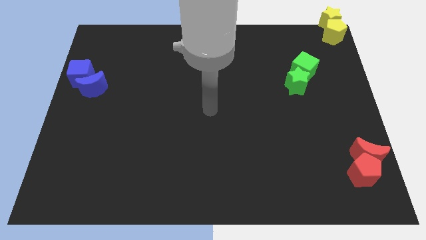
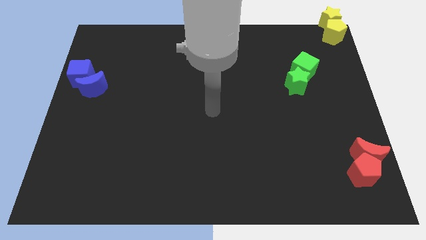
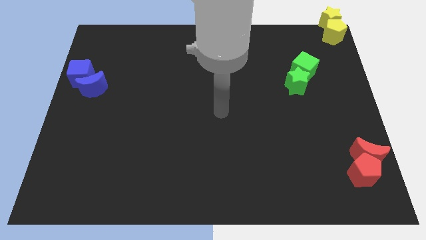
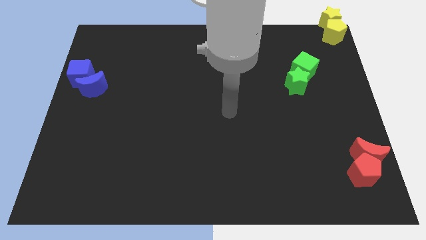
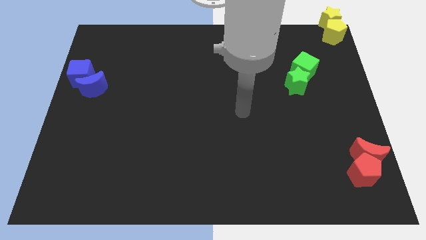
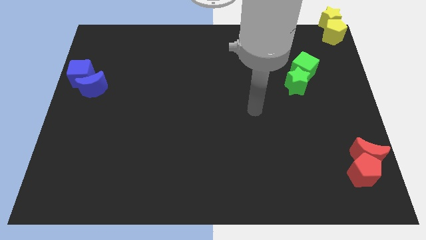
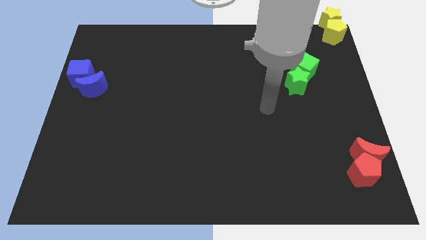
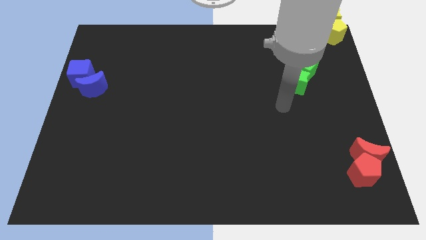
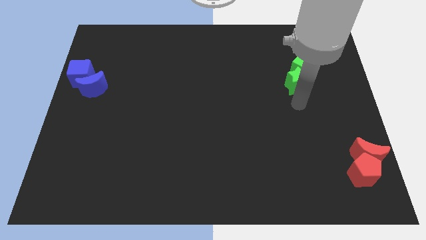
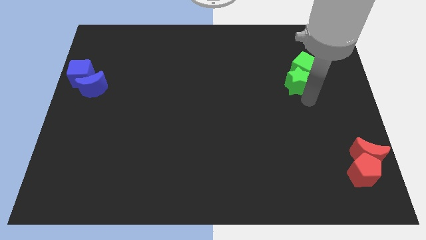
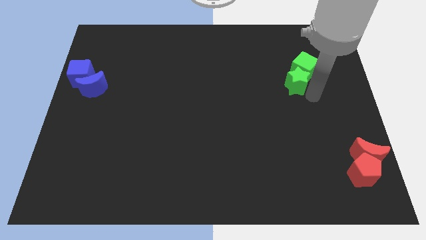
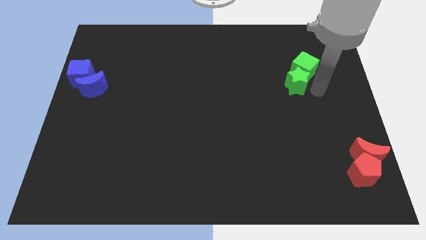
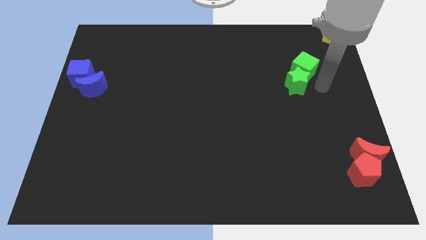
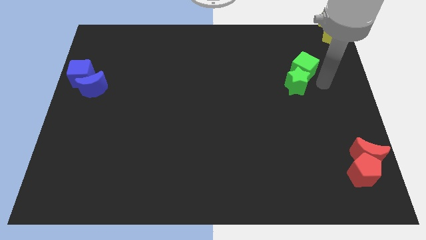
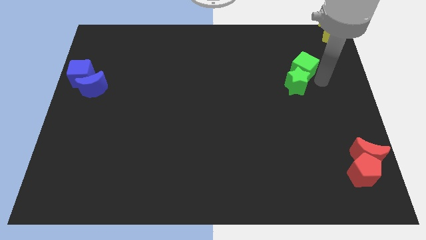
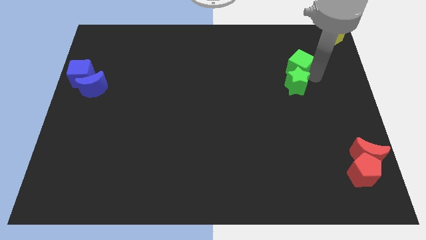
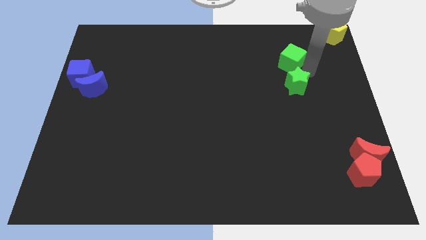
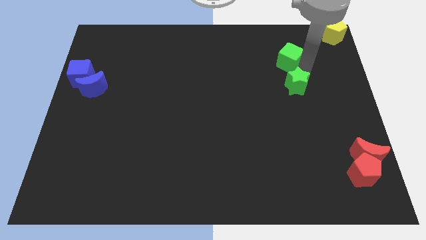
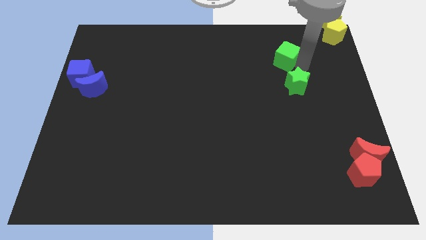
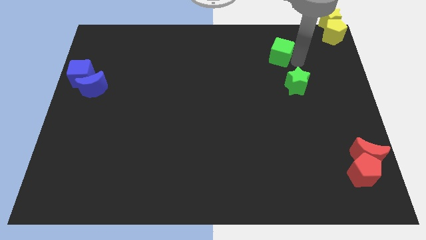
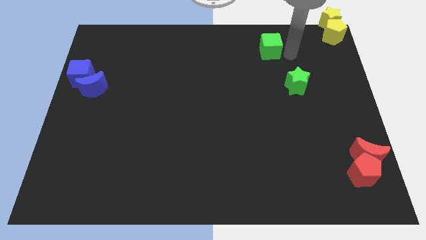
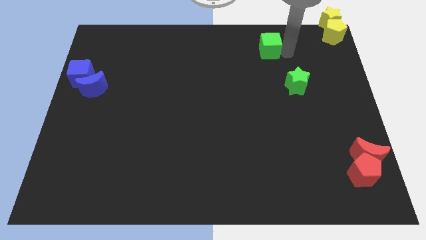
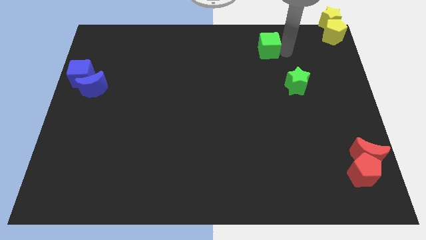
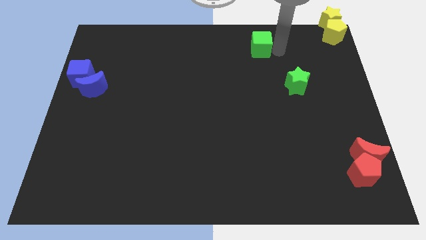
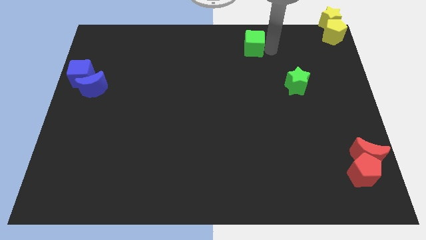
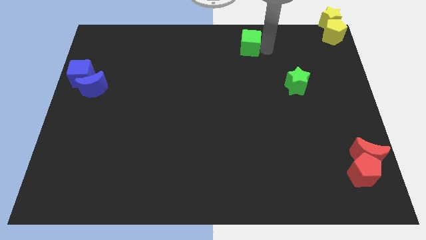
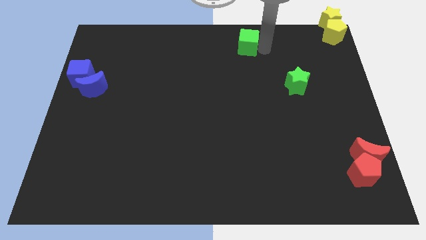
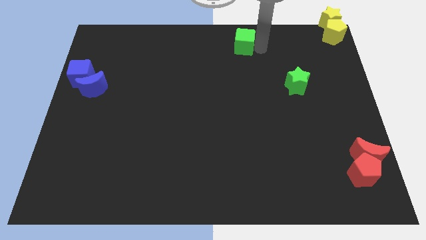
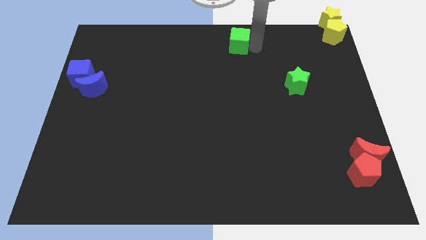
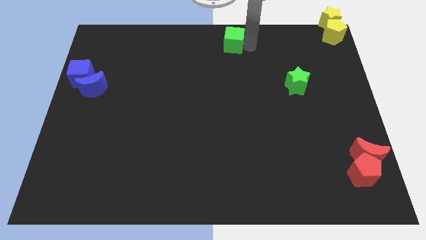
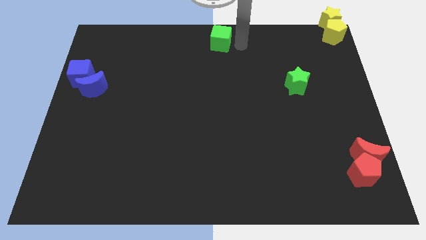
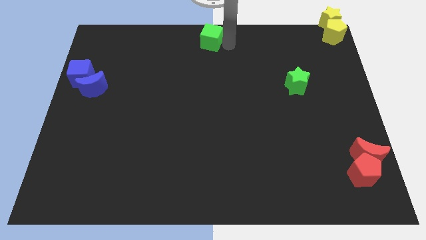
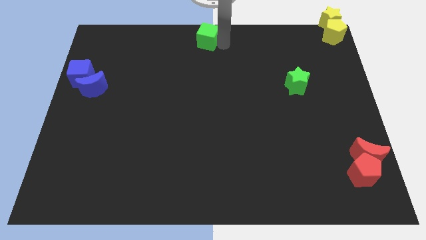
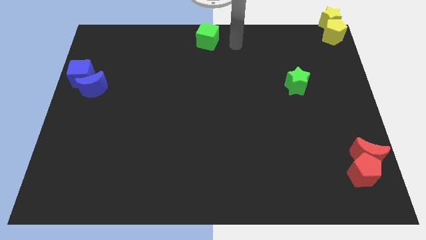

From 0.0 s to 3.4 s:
slide the green cube to the center of the table

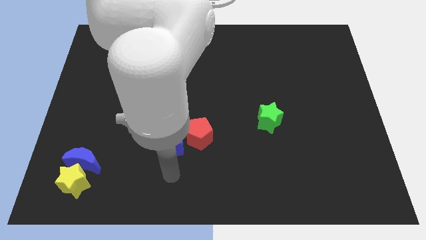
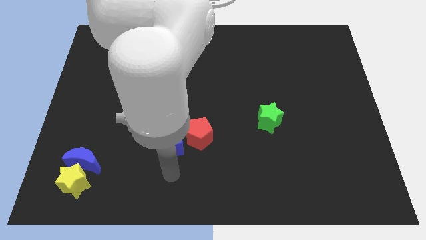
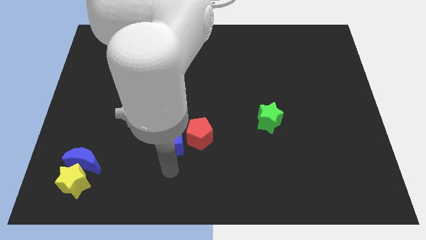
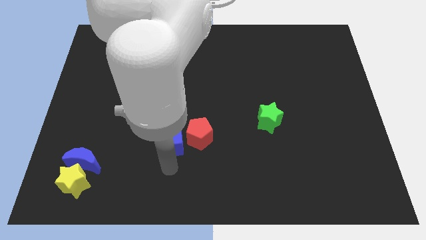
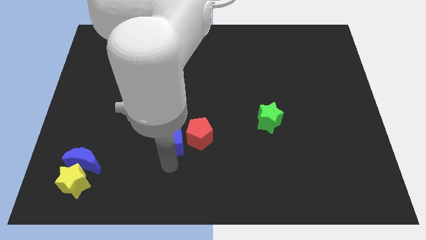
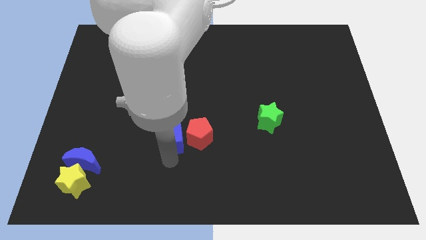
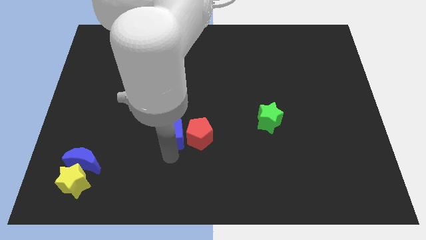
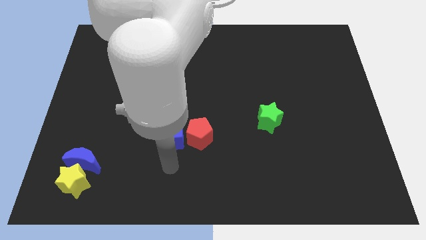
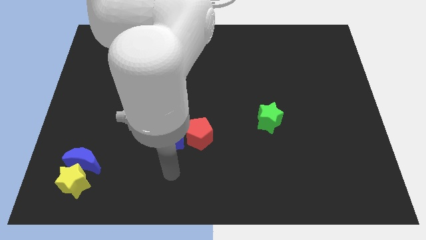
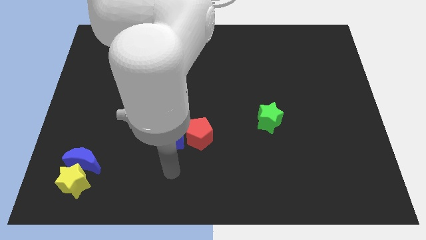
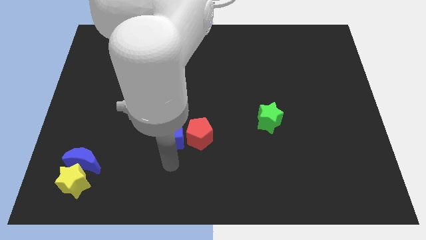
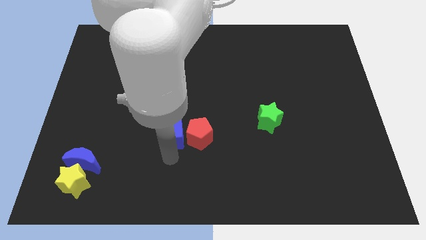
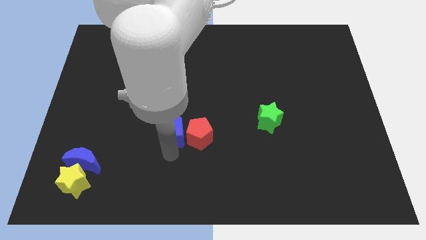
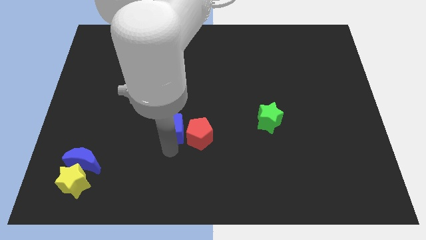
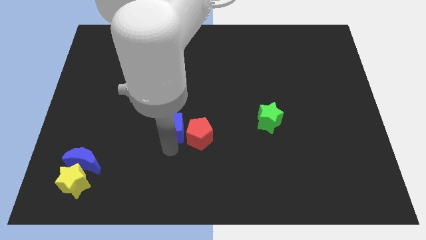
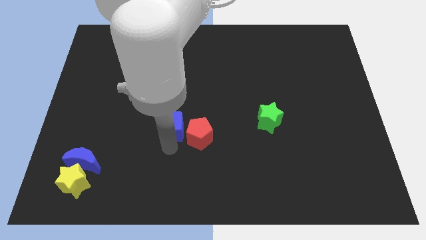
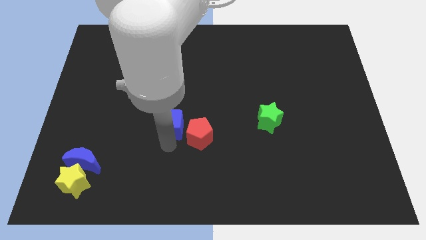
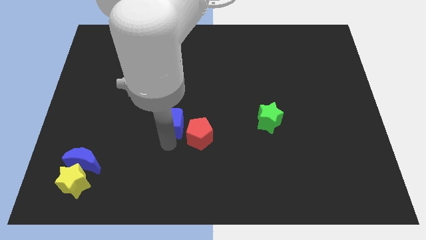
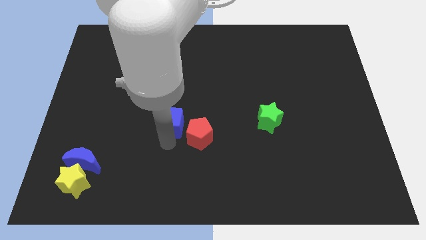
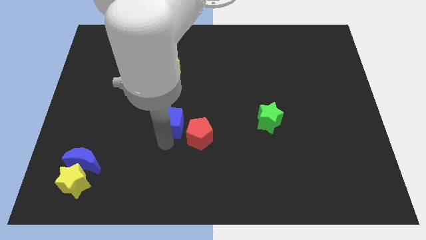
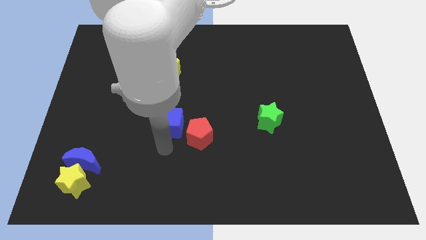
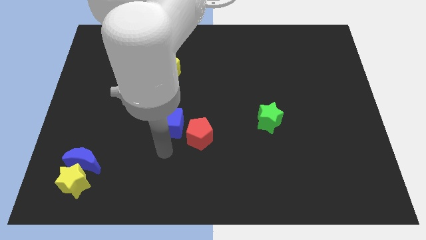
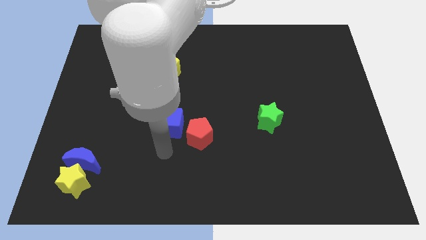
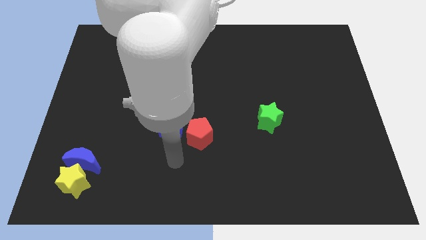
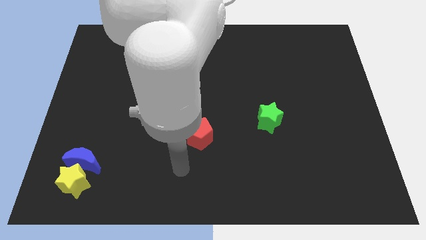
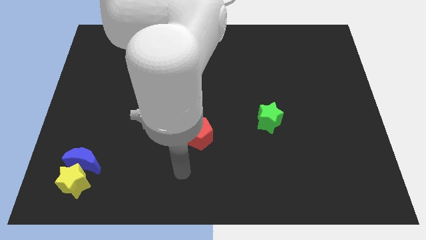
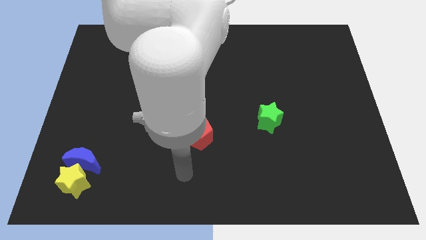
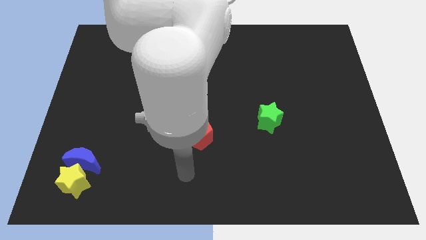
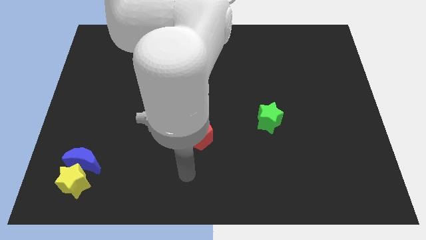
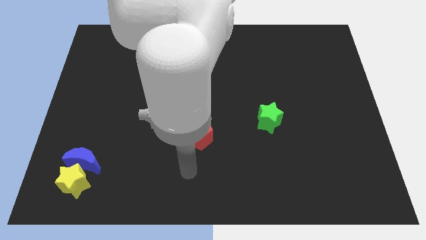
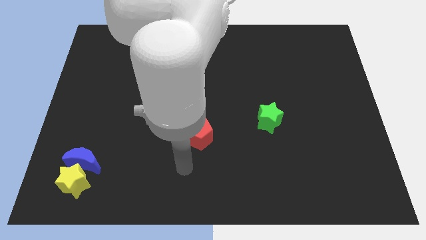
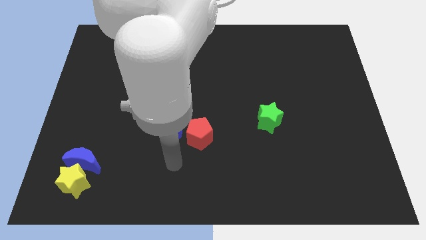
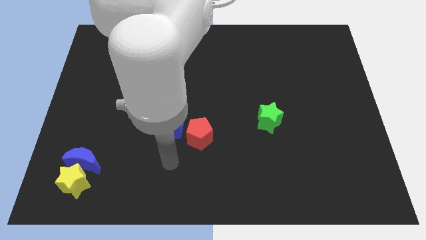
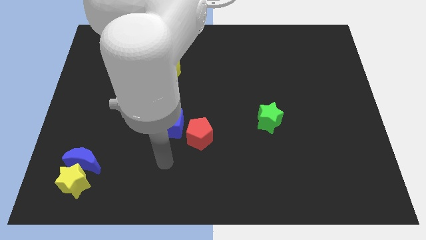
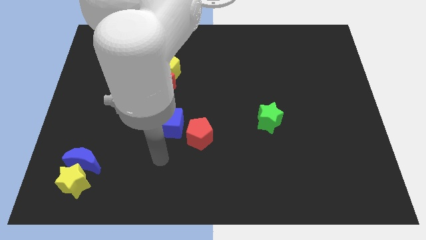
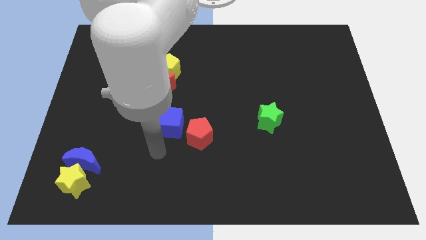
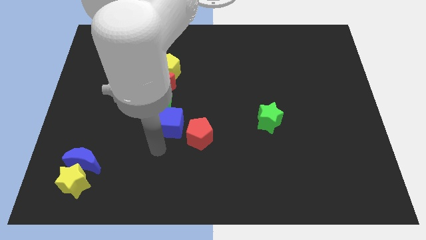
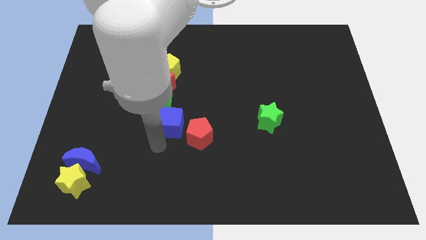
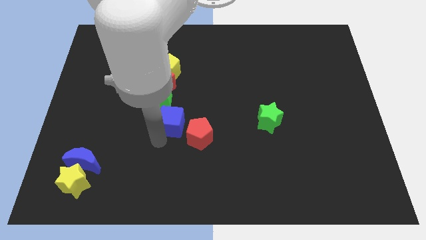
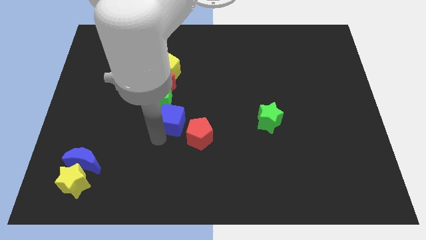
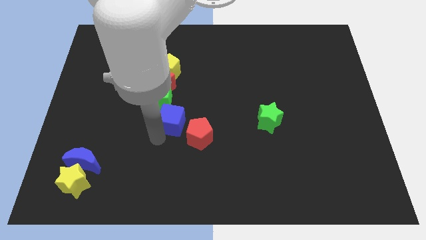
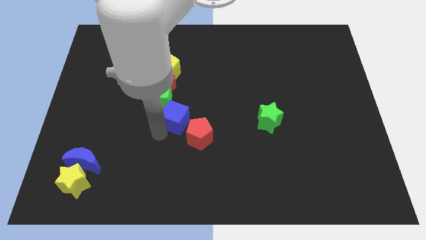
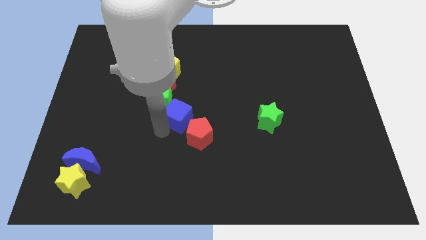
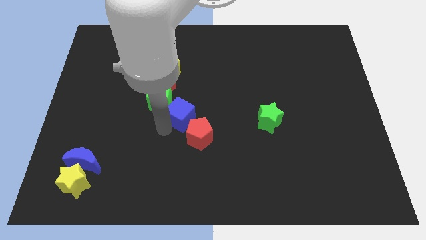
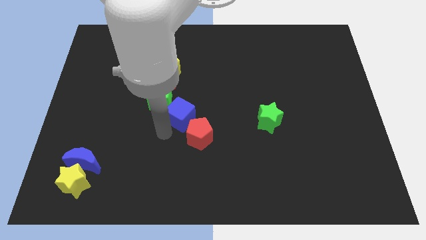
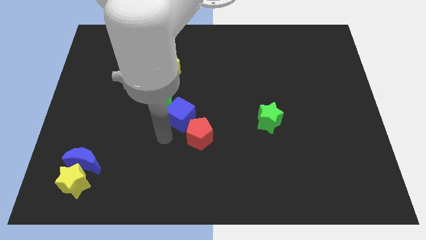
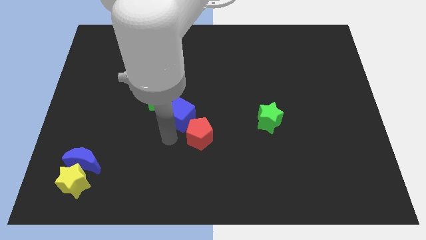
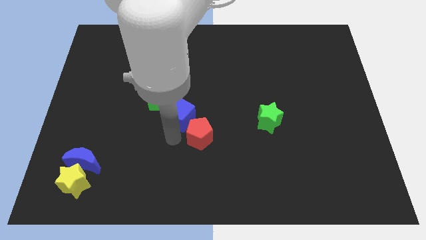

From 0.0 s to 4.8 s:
put the blue cube between the red pentagon and green cube

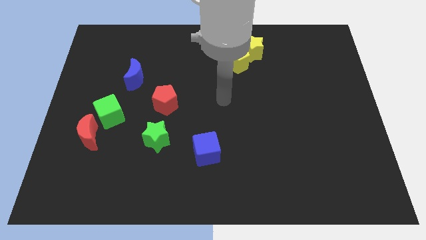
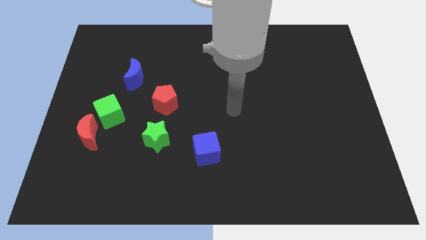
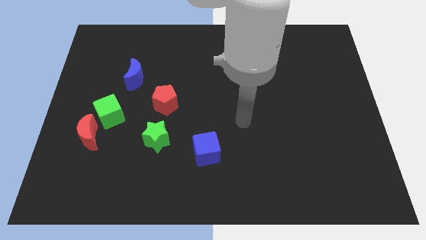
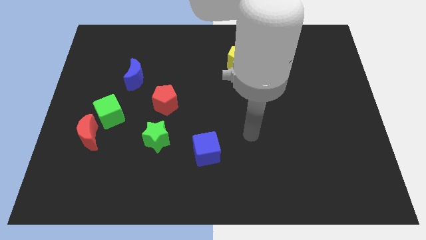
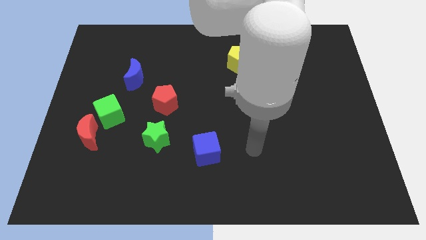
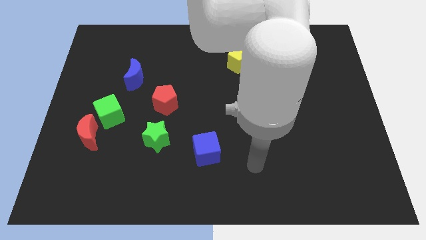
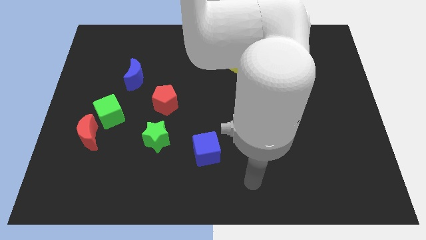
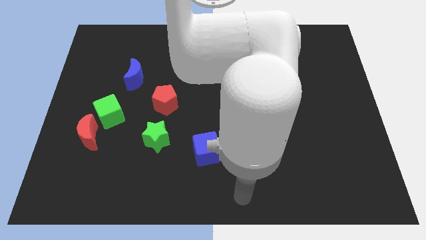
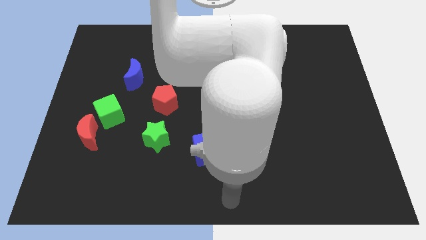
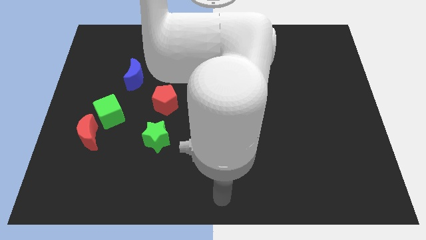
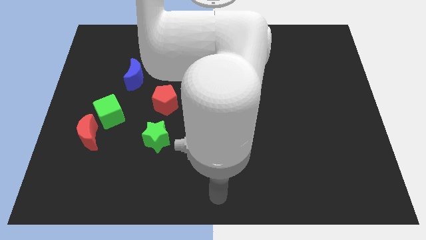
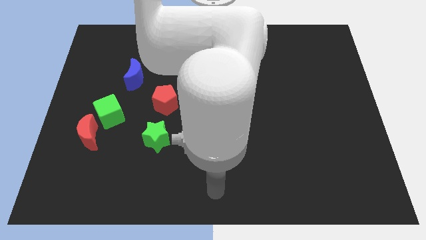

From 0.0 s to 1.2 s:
place your hand at the bottom of the blue cube
